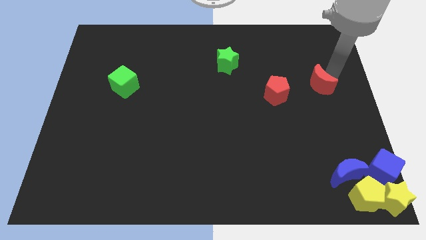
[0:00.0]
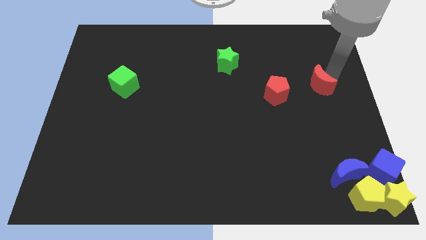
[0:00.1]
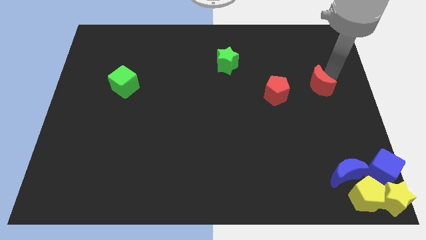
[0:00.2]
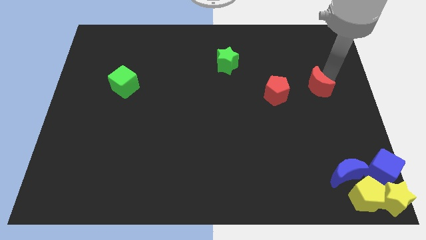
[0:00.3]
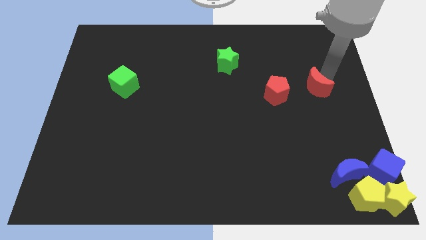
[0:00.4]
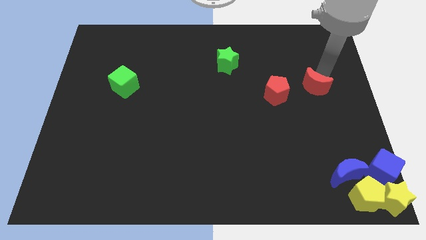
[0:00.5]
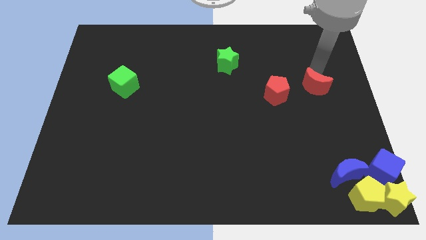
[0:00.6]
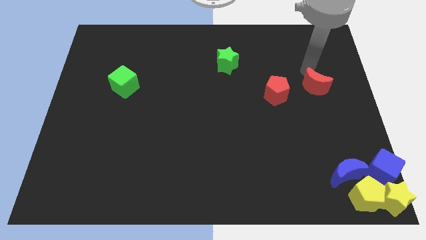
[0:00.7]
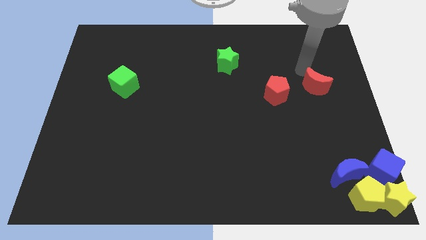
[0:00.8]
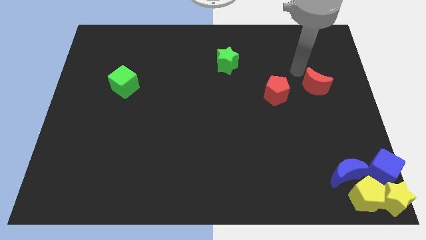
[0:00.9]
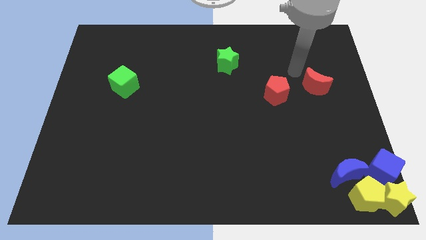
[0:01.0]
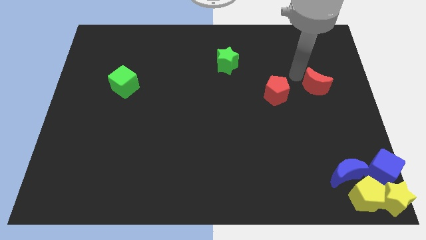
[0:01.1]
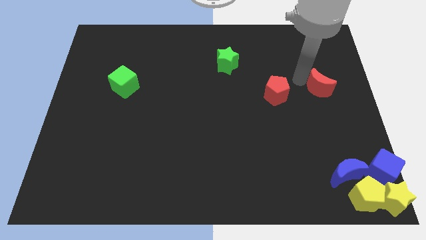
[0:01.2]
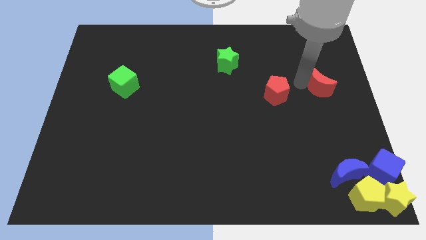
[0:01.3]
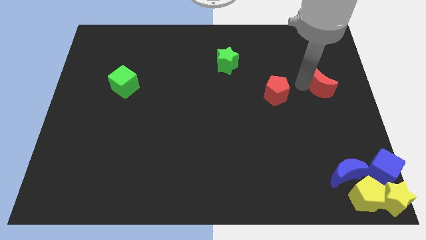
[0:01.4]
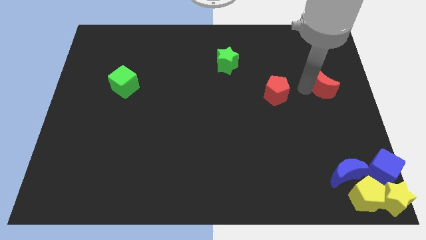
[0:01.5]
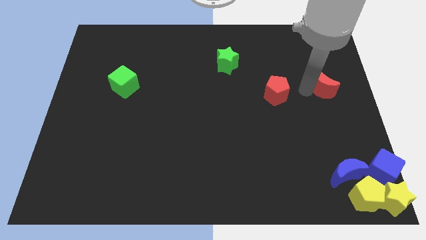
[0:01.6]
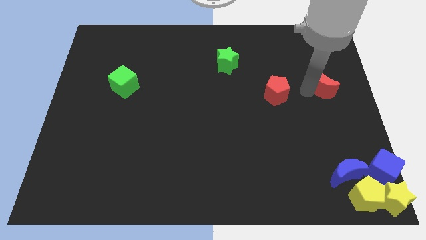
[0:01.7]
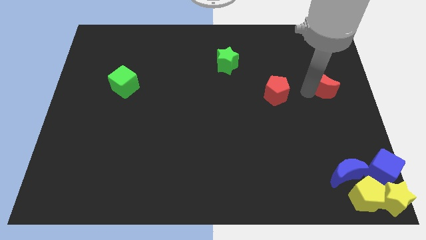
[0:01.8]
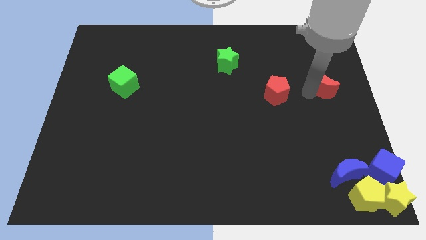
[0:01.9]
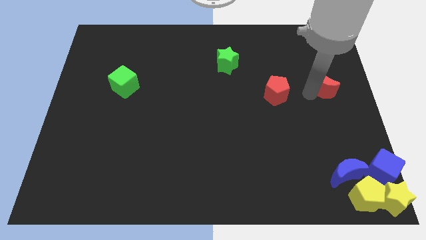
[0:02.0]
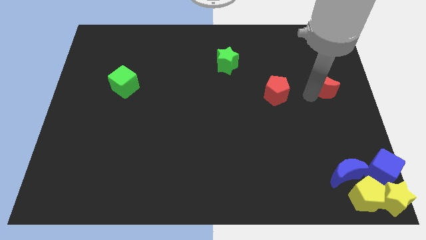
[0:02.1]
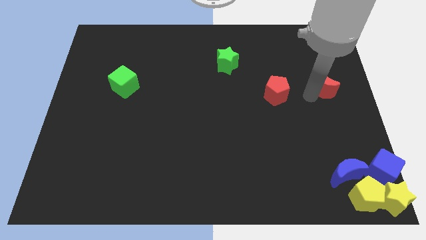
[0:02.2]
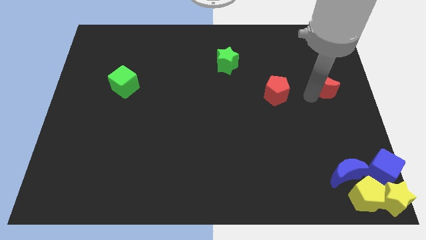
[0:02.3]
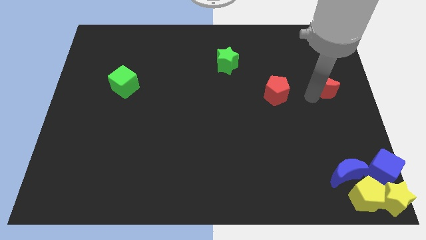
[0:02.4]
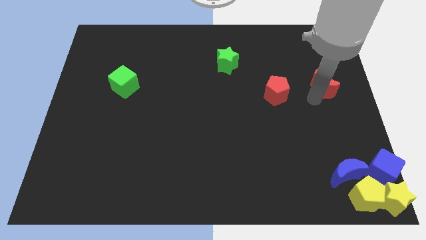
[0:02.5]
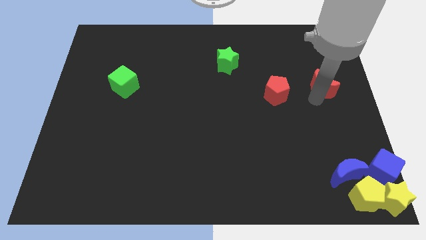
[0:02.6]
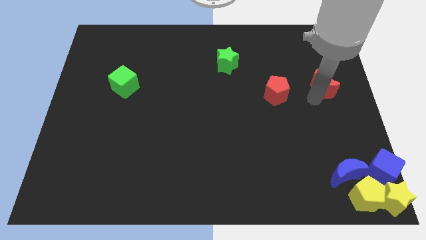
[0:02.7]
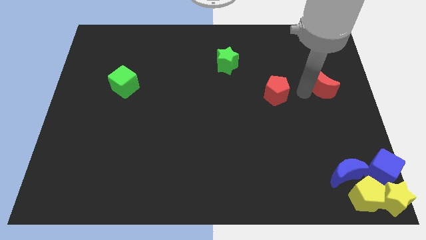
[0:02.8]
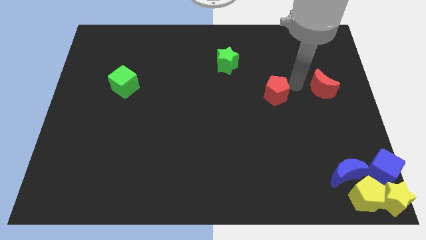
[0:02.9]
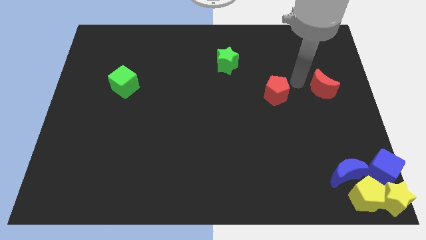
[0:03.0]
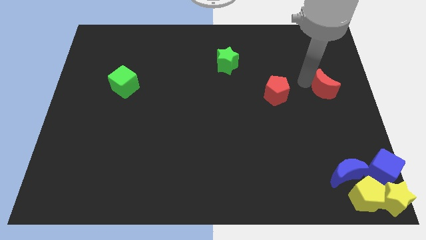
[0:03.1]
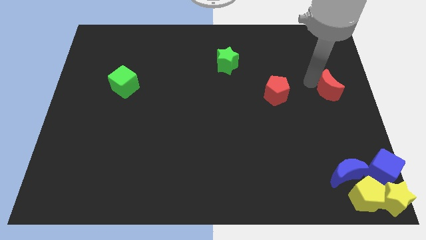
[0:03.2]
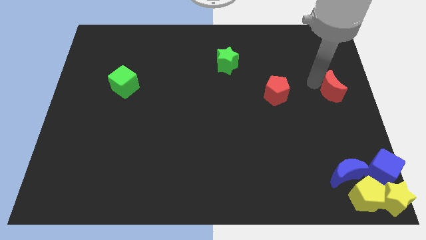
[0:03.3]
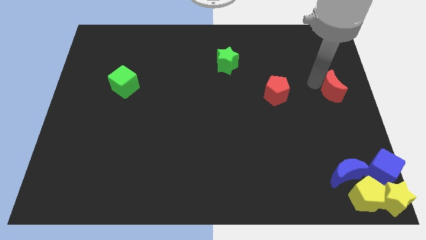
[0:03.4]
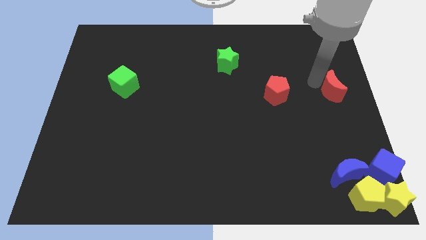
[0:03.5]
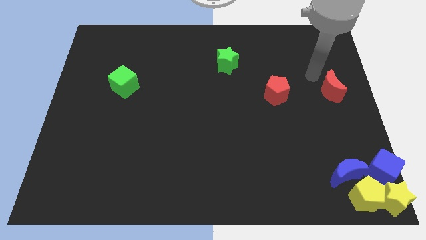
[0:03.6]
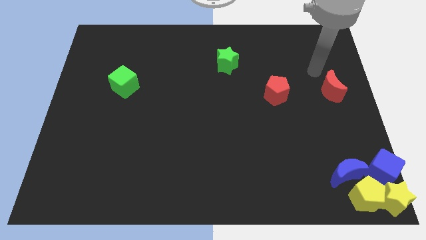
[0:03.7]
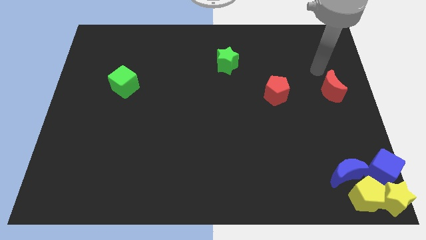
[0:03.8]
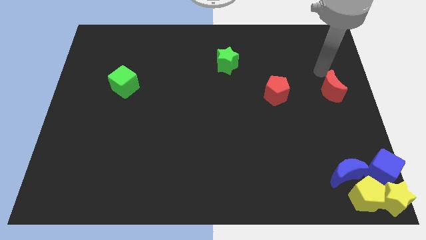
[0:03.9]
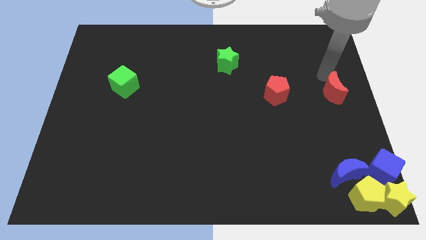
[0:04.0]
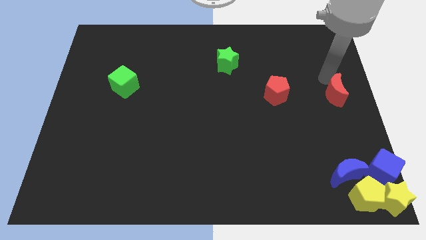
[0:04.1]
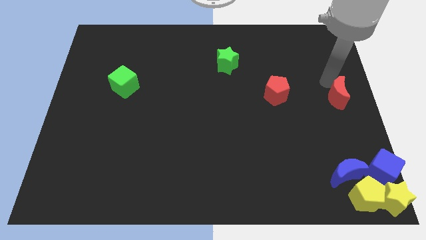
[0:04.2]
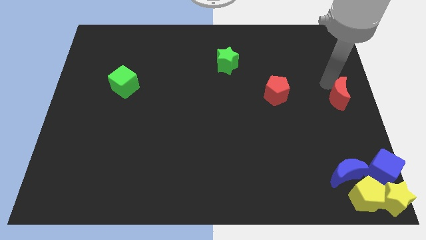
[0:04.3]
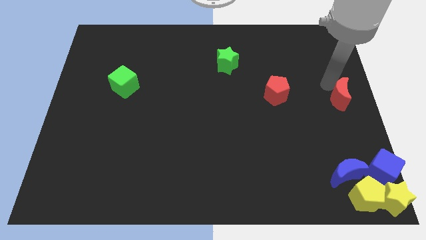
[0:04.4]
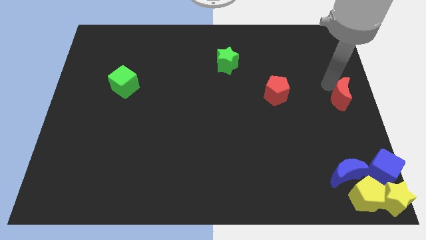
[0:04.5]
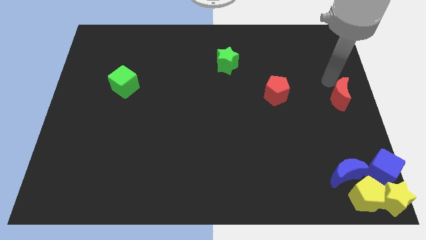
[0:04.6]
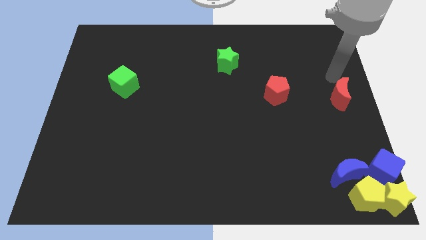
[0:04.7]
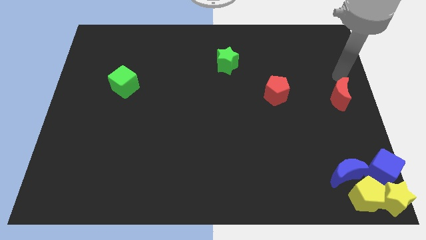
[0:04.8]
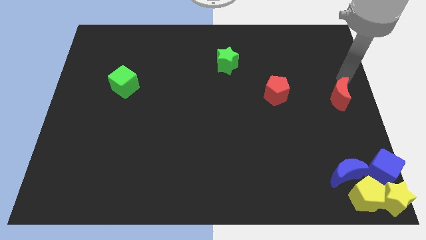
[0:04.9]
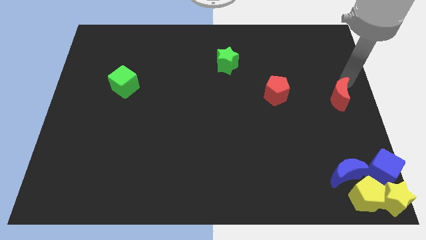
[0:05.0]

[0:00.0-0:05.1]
move the red moon vertically above the blue moon

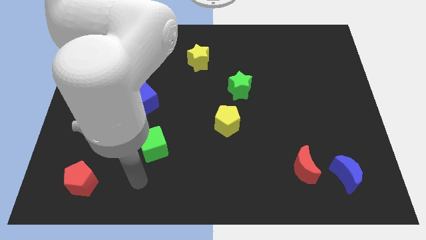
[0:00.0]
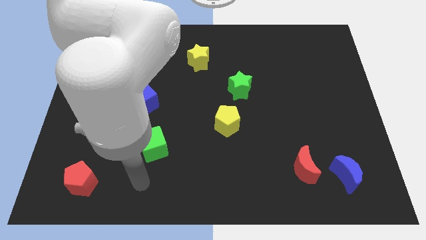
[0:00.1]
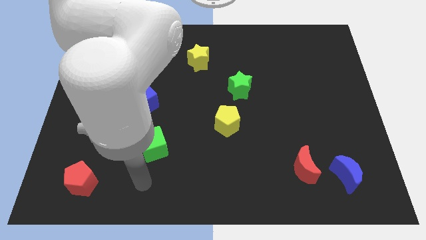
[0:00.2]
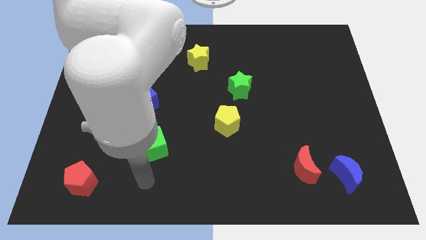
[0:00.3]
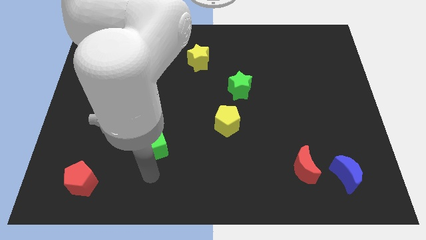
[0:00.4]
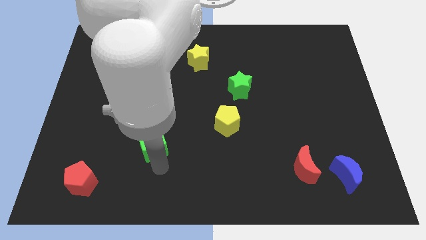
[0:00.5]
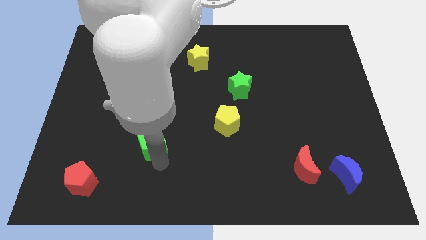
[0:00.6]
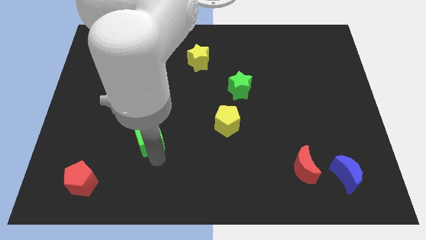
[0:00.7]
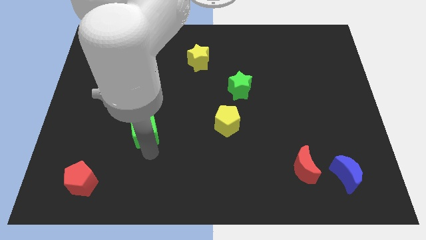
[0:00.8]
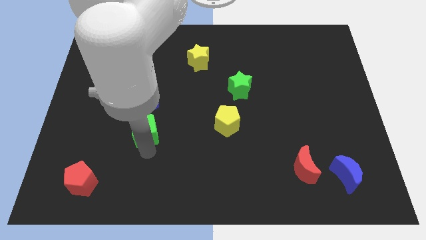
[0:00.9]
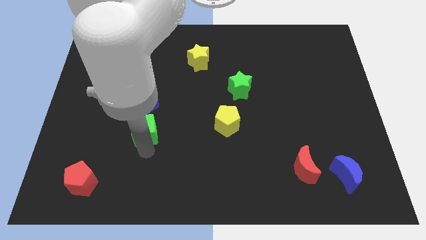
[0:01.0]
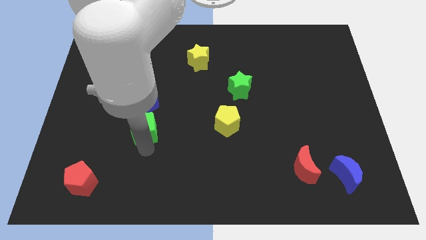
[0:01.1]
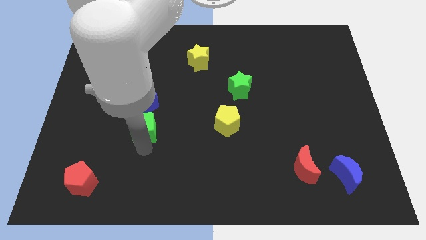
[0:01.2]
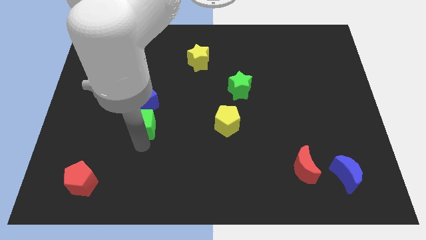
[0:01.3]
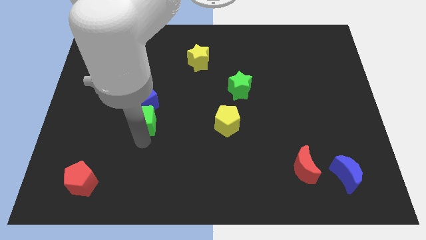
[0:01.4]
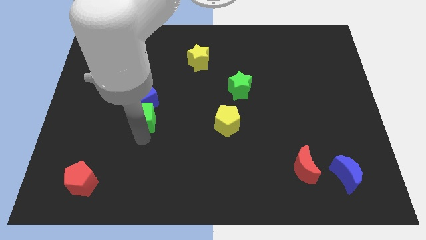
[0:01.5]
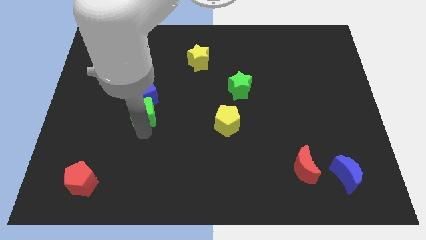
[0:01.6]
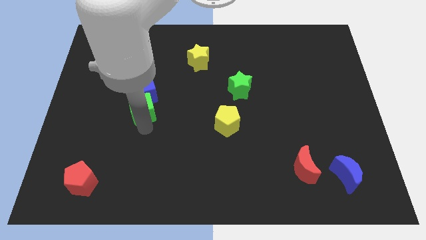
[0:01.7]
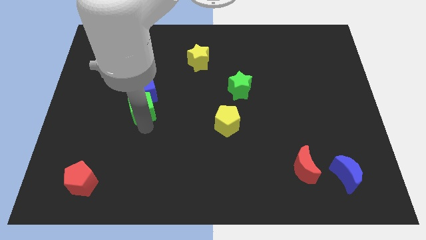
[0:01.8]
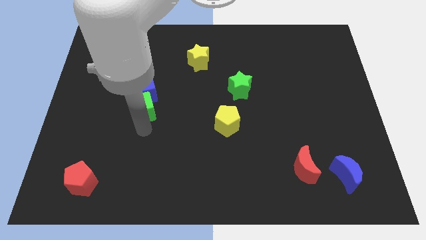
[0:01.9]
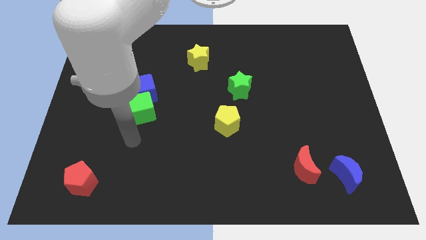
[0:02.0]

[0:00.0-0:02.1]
slide green cube into blue cube

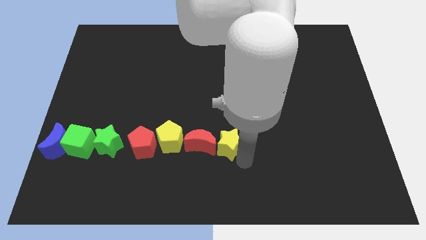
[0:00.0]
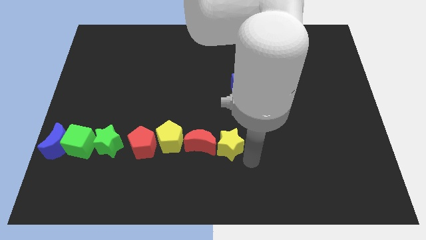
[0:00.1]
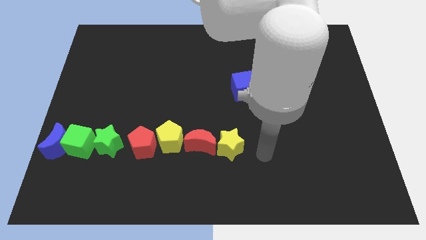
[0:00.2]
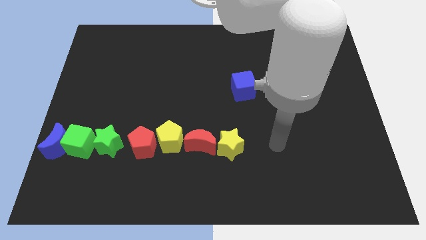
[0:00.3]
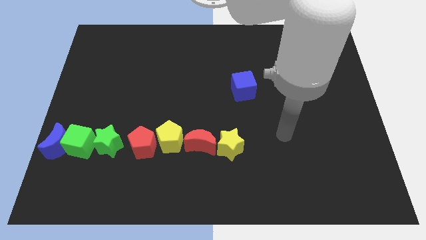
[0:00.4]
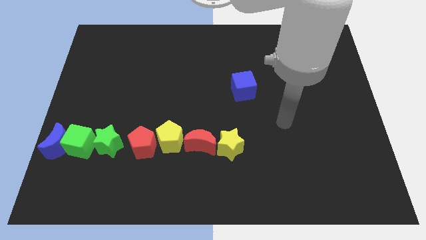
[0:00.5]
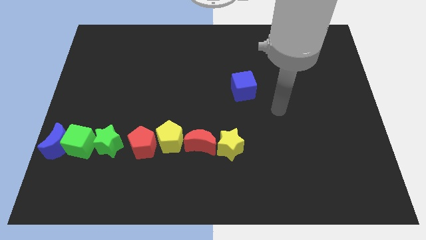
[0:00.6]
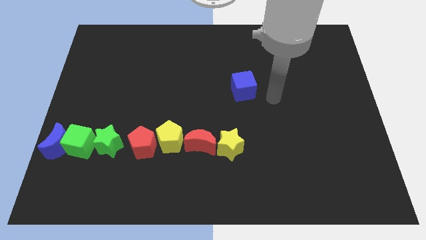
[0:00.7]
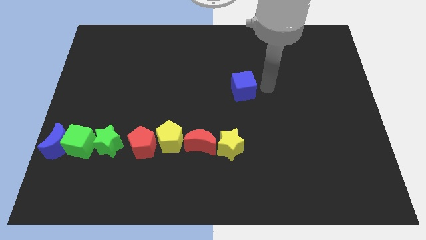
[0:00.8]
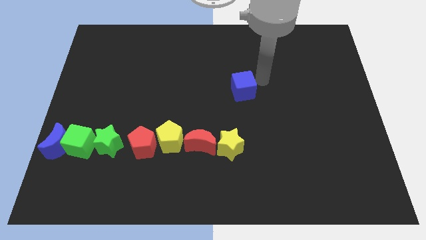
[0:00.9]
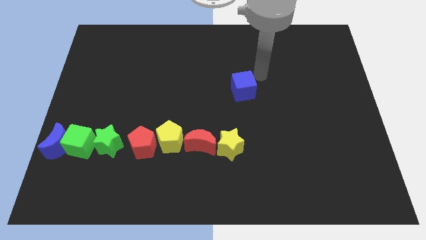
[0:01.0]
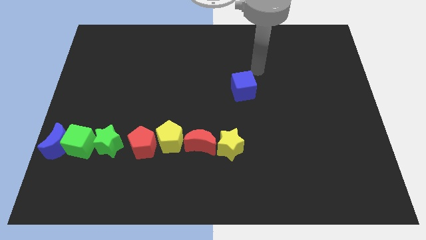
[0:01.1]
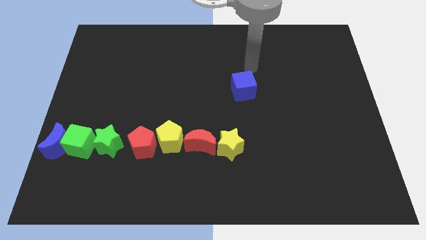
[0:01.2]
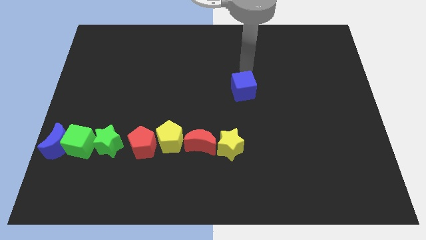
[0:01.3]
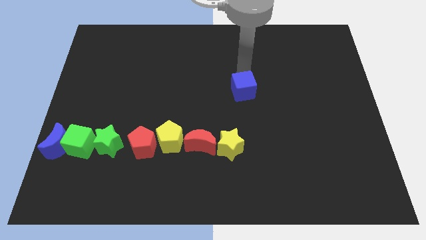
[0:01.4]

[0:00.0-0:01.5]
move your arm towards the top of blue cube

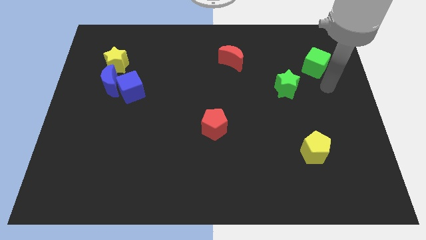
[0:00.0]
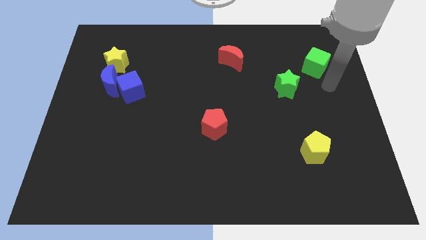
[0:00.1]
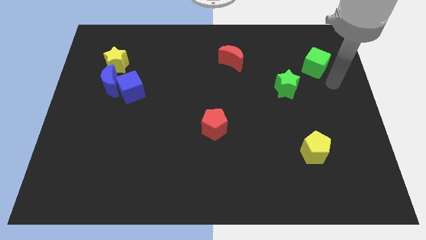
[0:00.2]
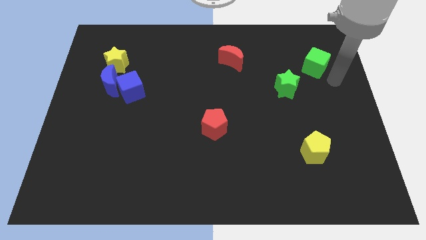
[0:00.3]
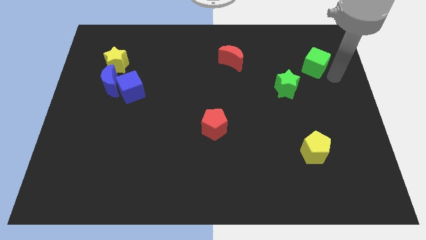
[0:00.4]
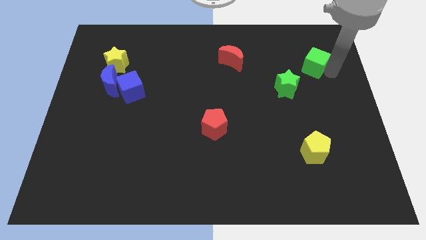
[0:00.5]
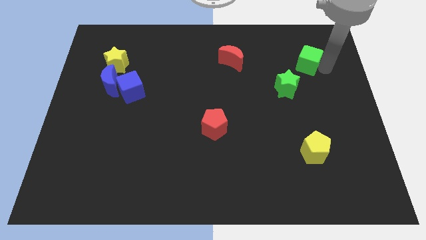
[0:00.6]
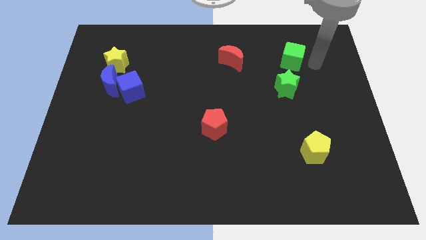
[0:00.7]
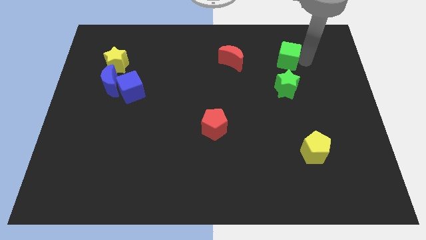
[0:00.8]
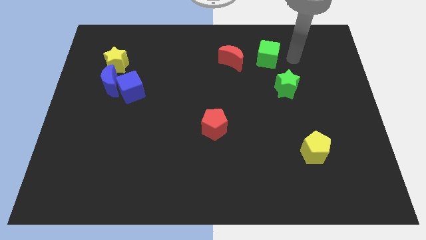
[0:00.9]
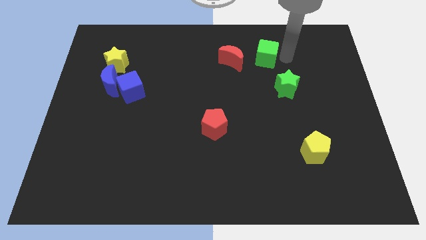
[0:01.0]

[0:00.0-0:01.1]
slightly push the green cube towards the red crescent
